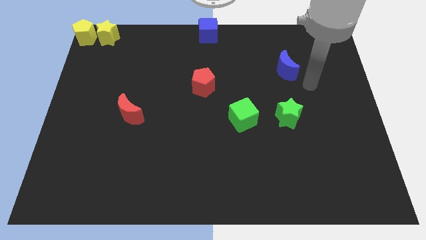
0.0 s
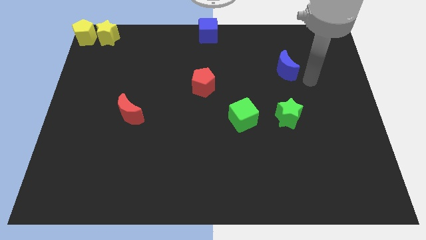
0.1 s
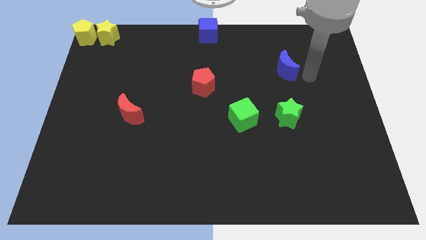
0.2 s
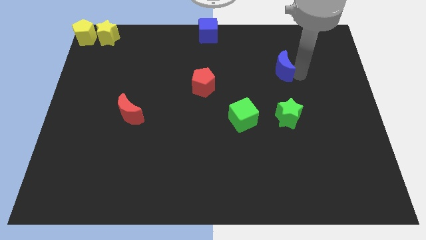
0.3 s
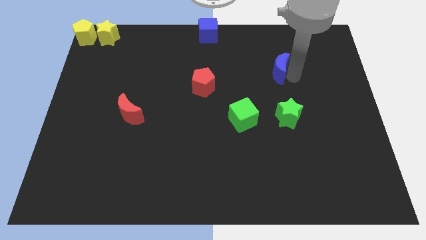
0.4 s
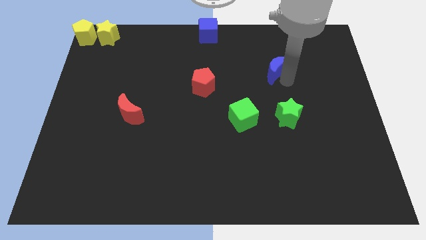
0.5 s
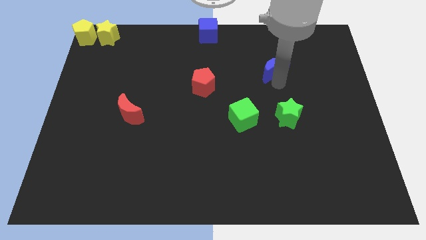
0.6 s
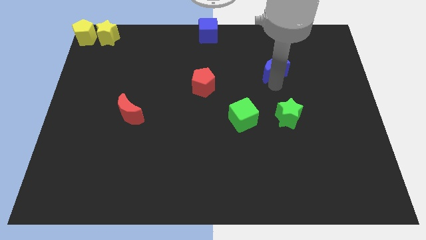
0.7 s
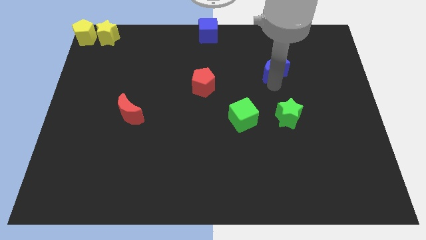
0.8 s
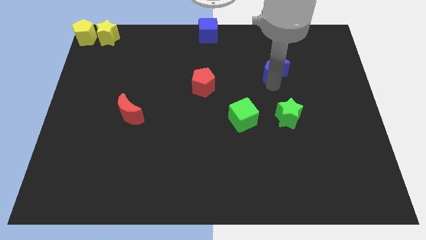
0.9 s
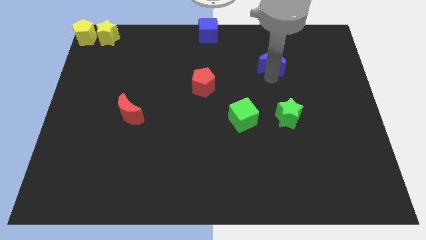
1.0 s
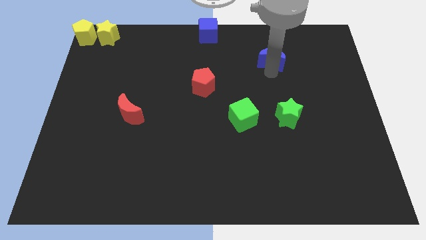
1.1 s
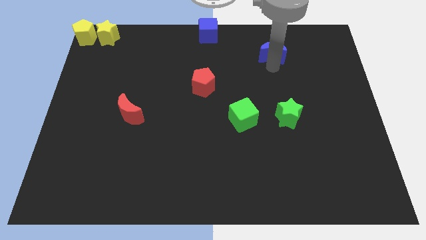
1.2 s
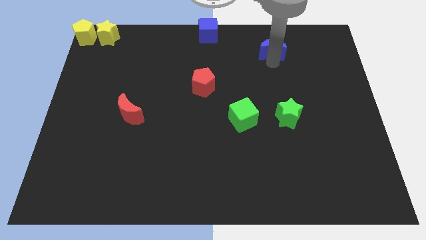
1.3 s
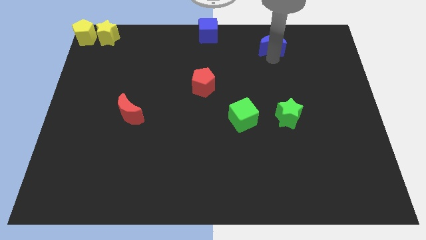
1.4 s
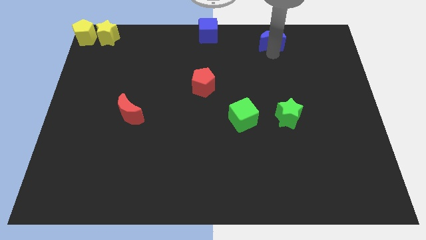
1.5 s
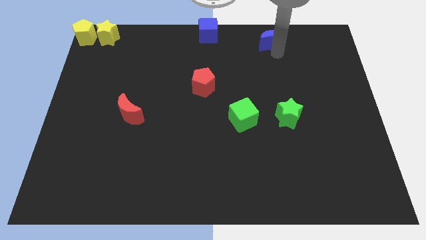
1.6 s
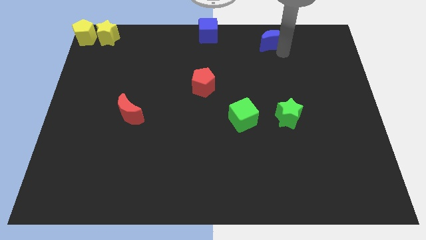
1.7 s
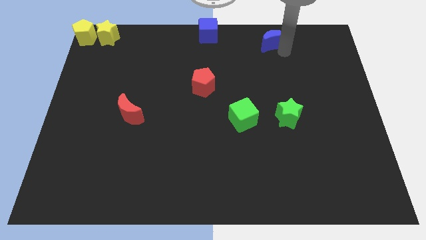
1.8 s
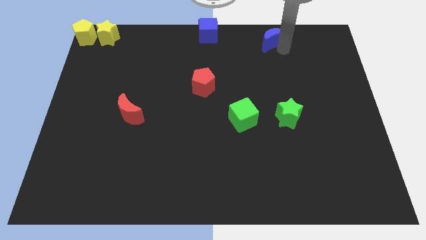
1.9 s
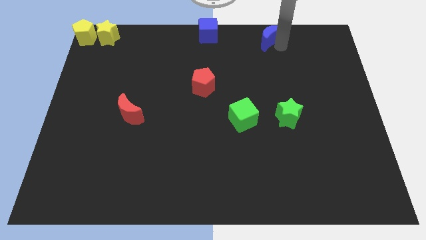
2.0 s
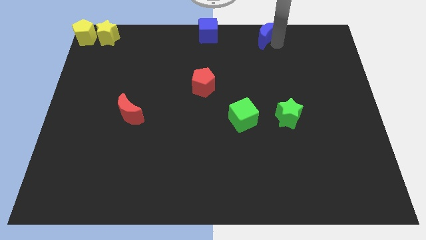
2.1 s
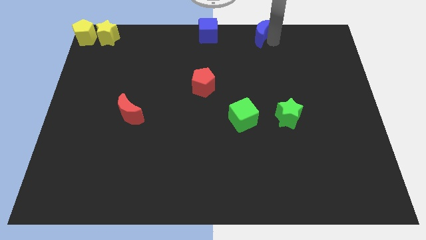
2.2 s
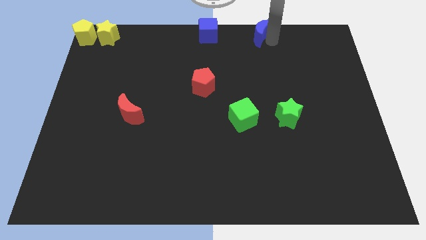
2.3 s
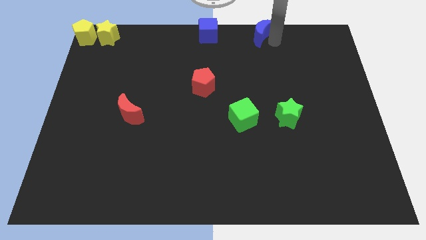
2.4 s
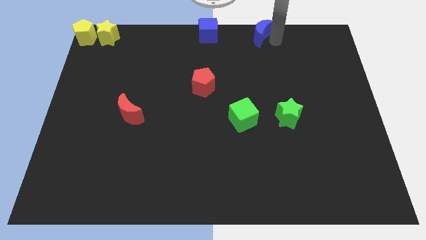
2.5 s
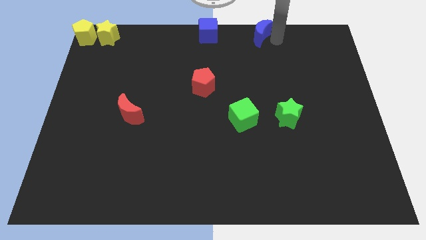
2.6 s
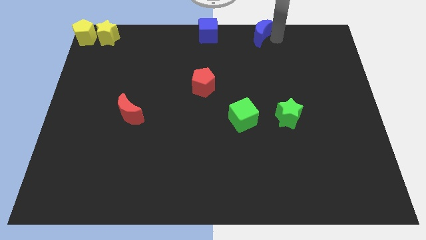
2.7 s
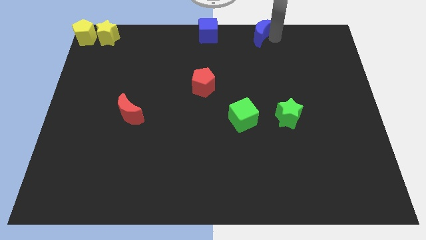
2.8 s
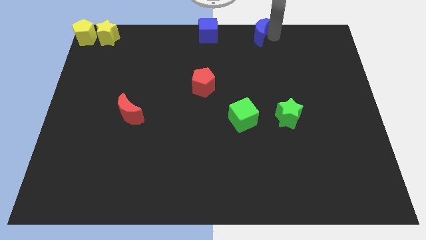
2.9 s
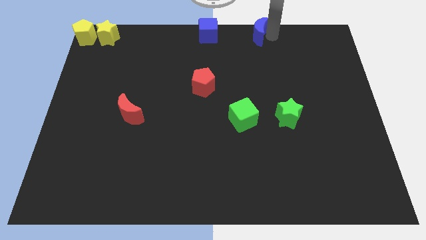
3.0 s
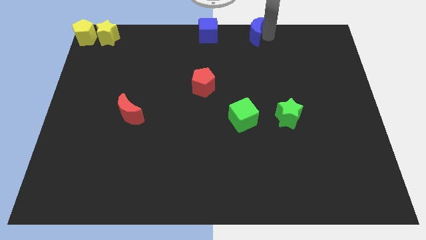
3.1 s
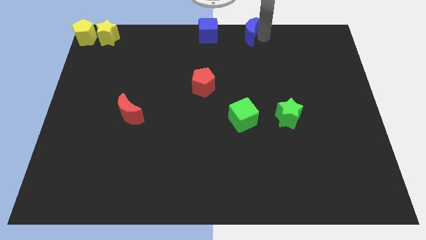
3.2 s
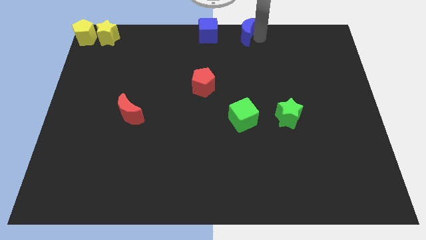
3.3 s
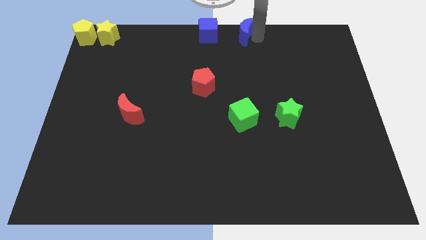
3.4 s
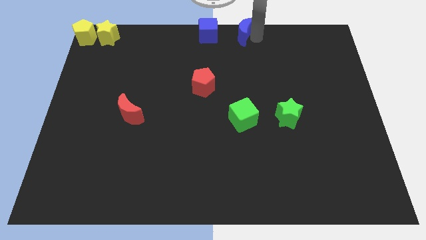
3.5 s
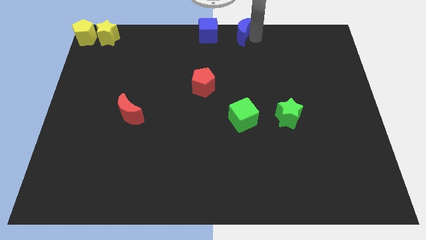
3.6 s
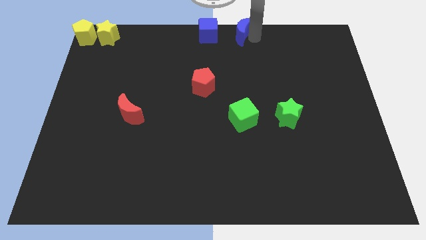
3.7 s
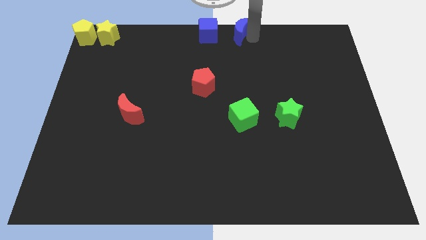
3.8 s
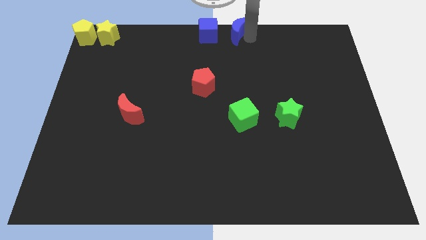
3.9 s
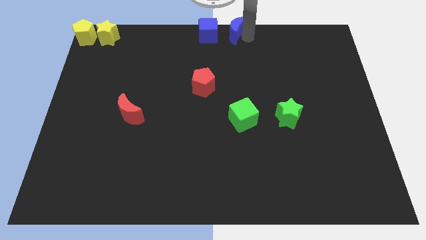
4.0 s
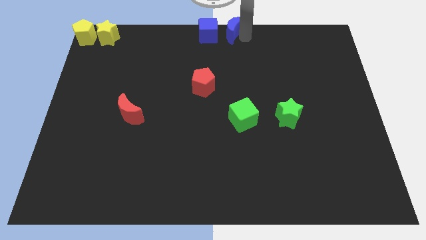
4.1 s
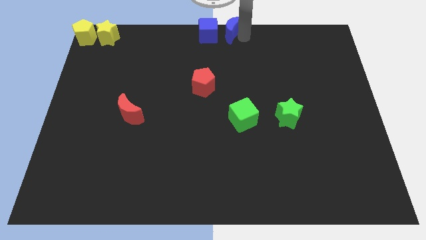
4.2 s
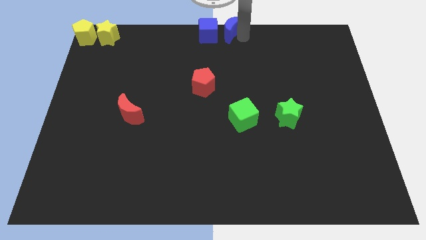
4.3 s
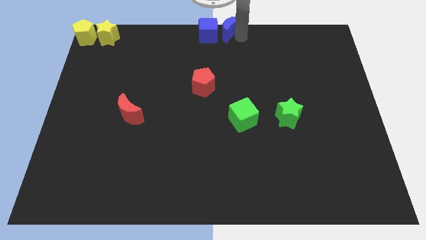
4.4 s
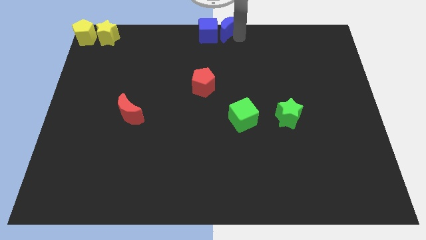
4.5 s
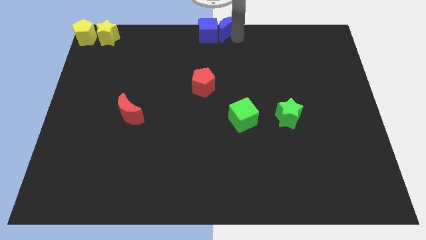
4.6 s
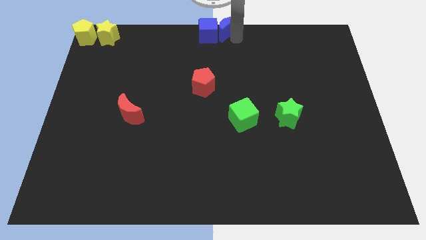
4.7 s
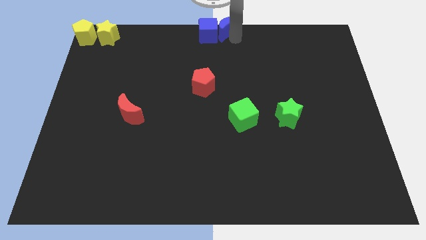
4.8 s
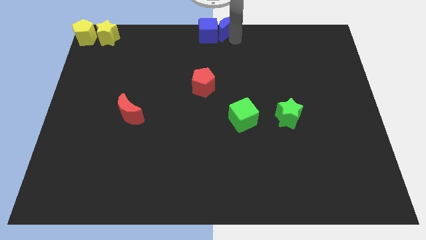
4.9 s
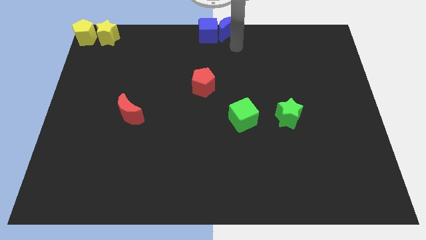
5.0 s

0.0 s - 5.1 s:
push the blue moon to the right side of the blue block

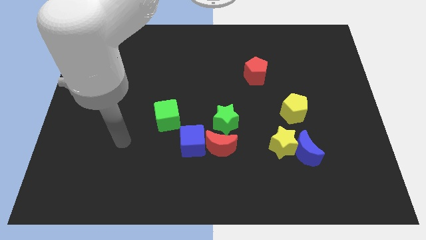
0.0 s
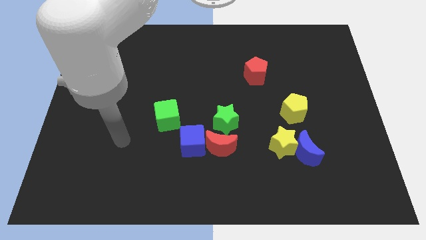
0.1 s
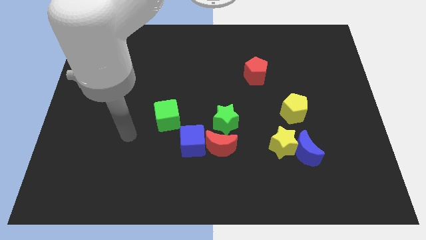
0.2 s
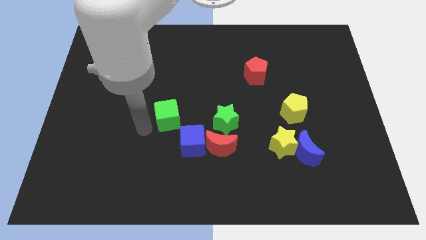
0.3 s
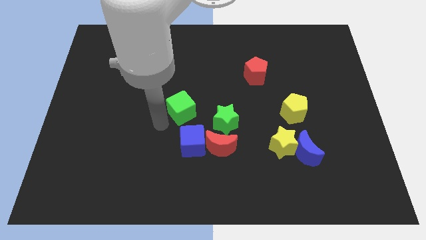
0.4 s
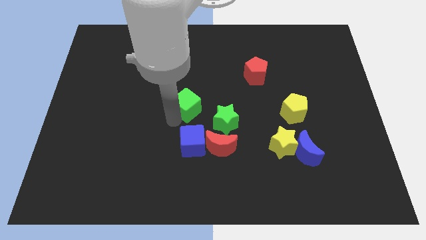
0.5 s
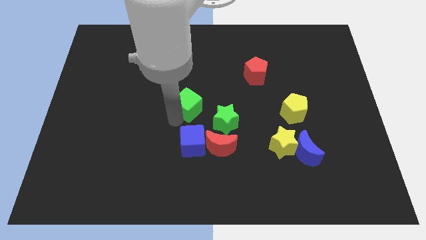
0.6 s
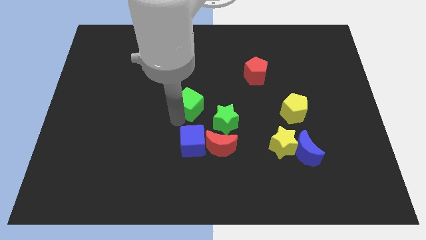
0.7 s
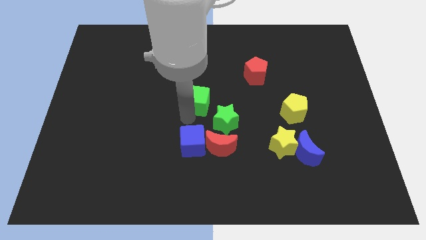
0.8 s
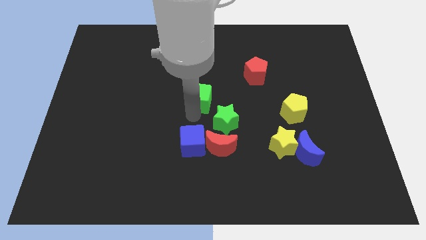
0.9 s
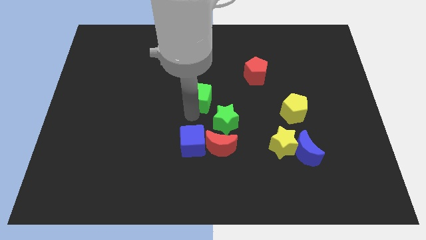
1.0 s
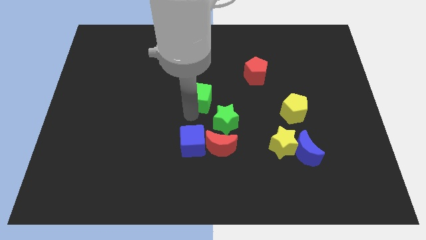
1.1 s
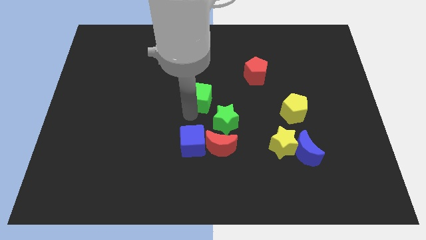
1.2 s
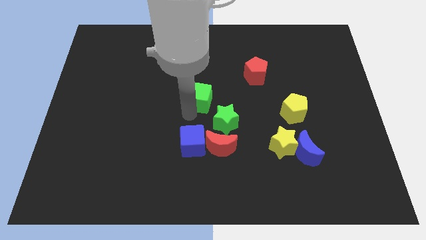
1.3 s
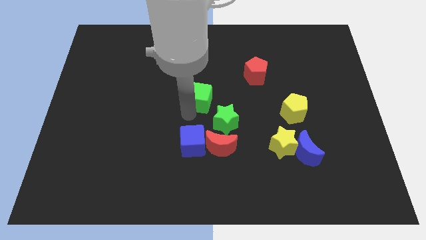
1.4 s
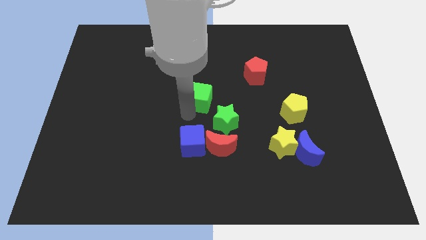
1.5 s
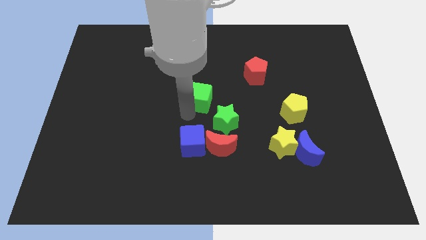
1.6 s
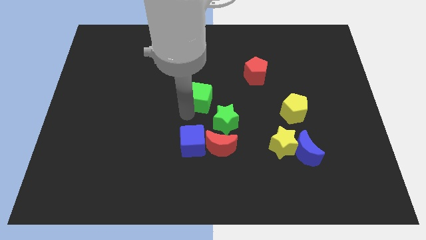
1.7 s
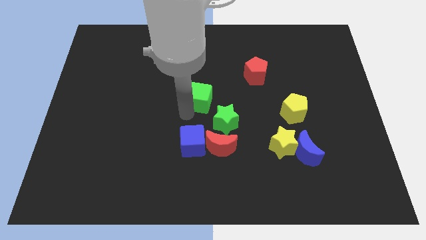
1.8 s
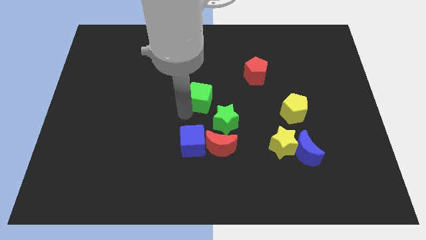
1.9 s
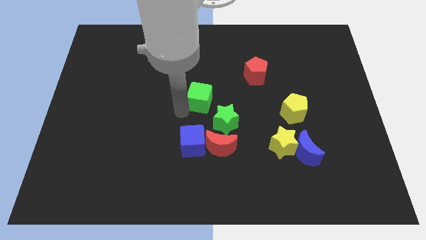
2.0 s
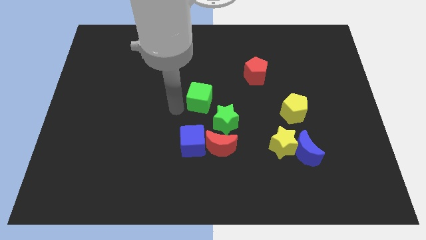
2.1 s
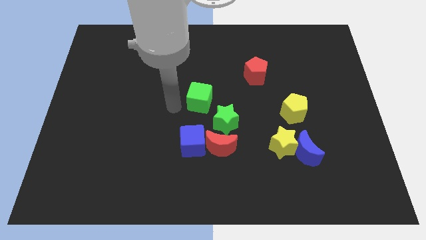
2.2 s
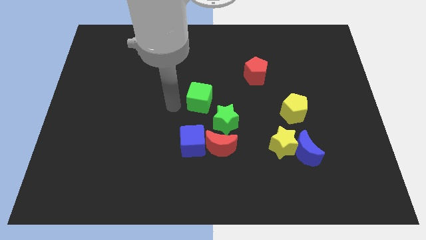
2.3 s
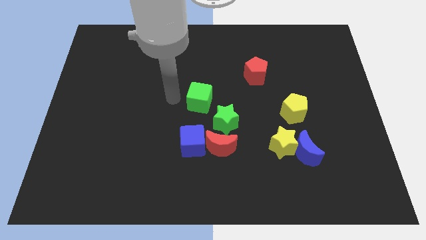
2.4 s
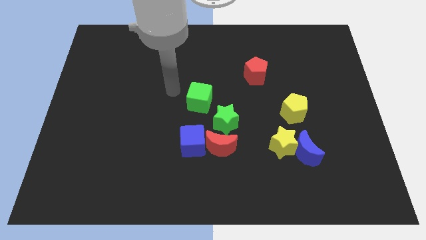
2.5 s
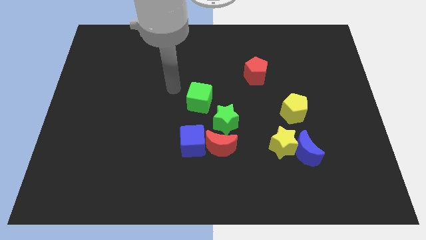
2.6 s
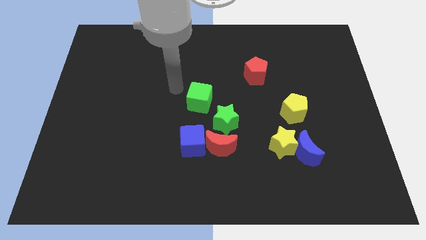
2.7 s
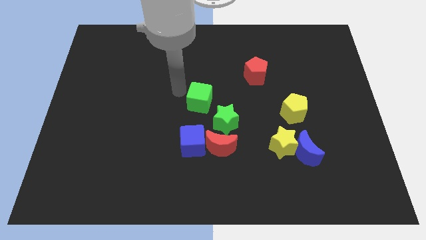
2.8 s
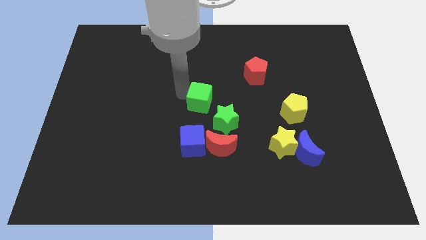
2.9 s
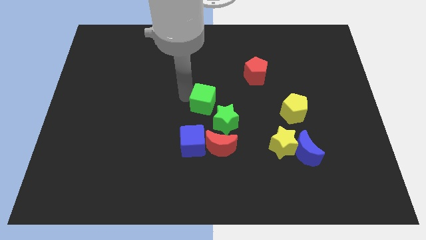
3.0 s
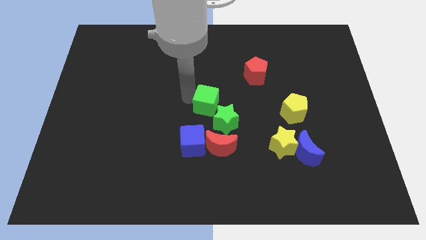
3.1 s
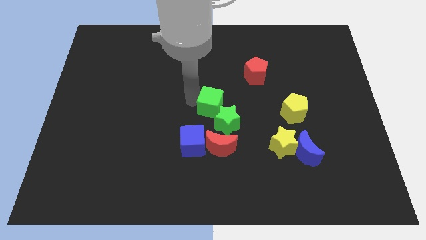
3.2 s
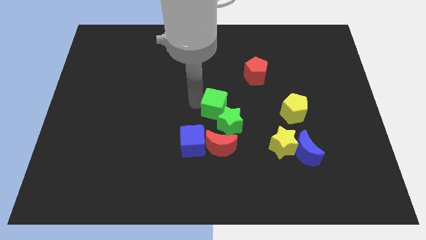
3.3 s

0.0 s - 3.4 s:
move the green cube at the center of the board

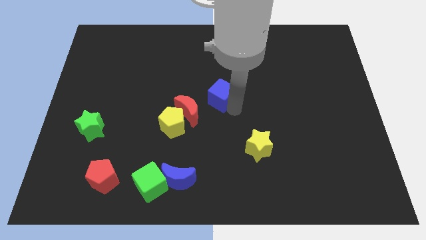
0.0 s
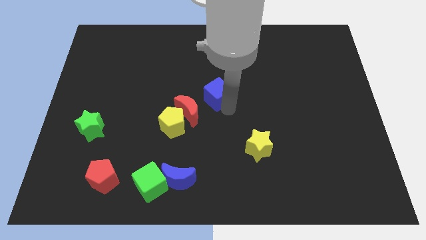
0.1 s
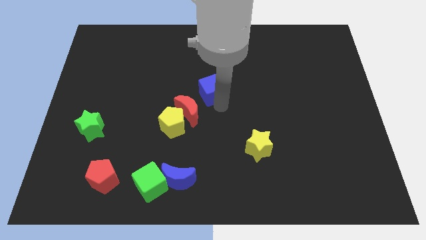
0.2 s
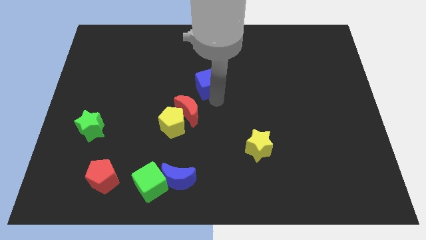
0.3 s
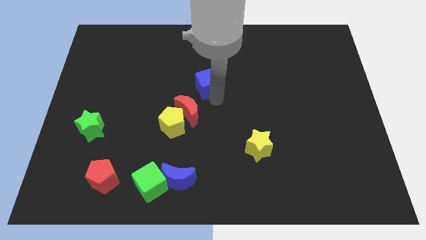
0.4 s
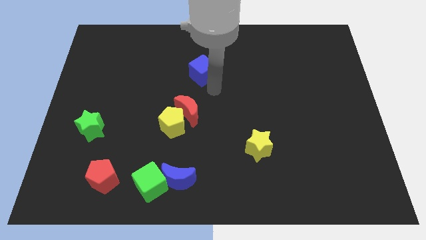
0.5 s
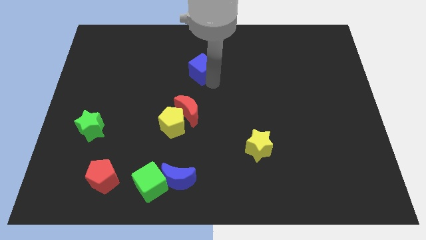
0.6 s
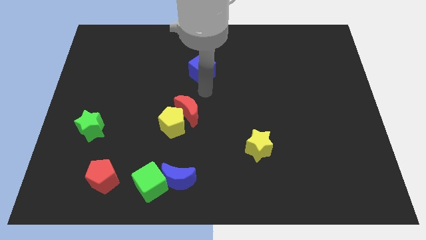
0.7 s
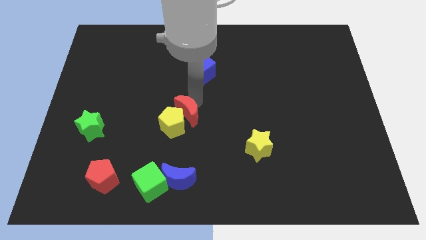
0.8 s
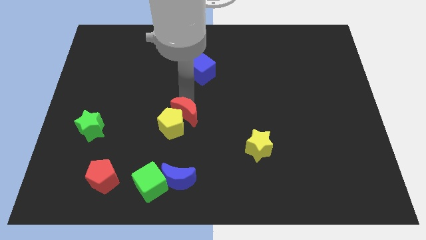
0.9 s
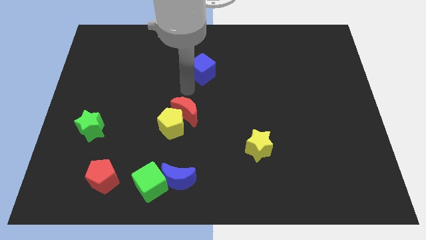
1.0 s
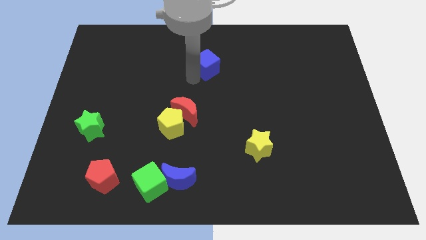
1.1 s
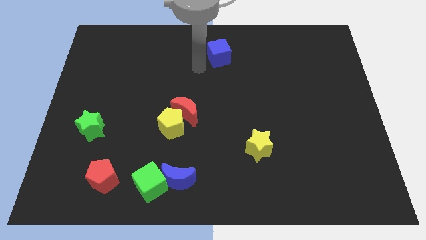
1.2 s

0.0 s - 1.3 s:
move the blue cube slightly up
